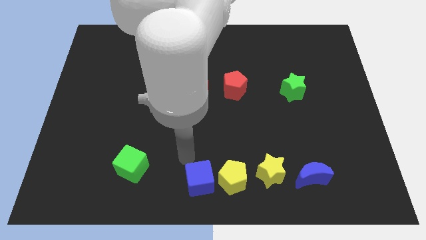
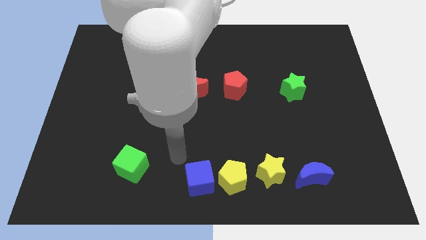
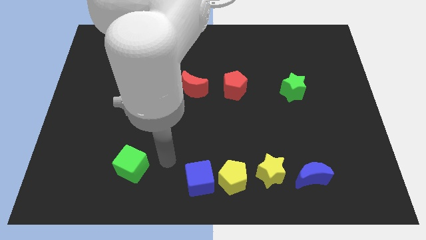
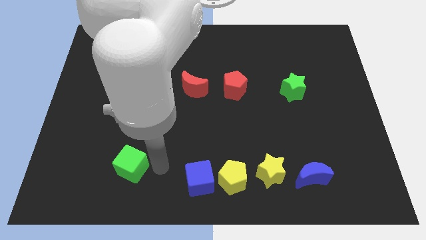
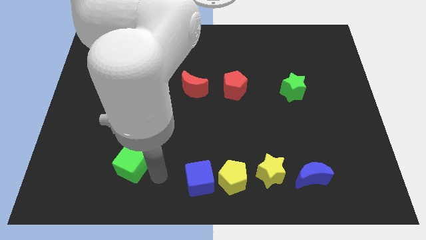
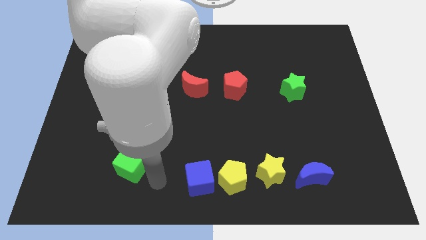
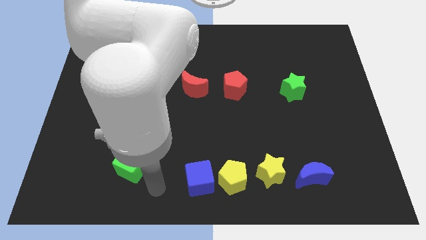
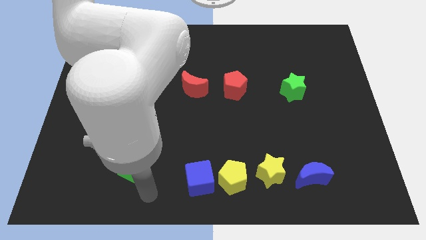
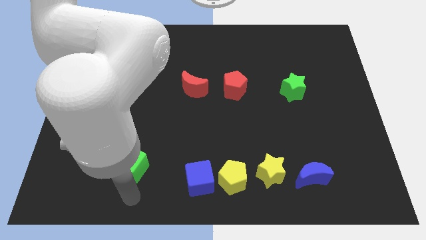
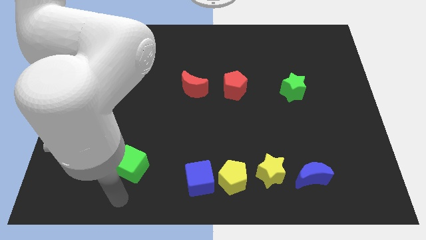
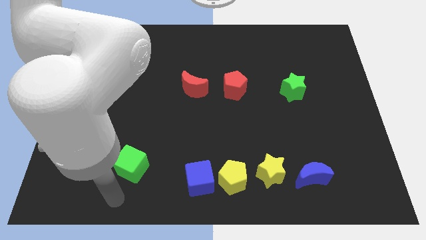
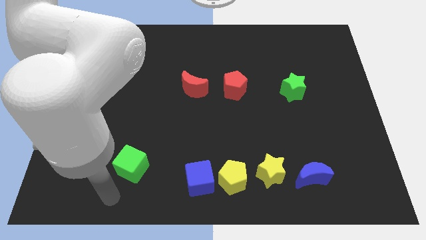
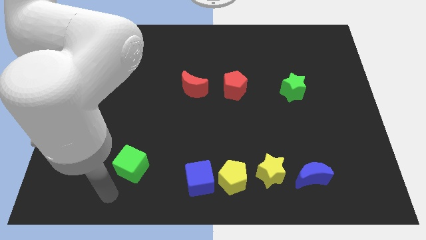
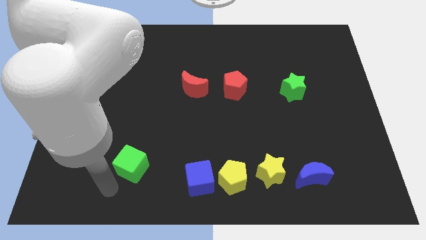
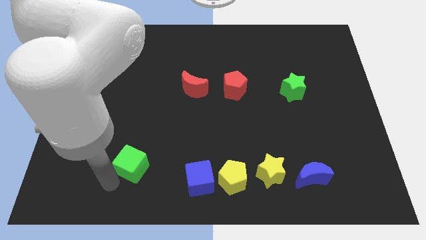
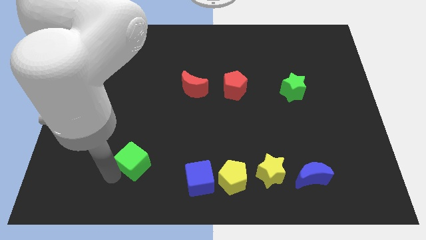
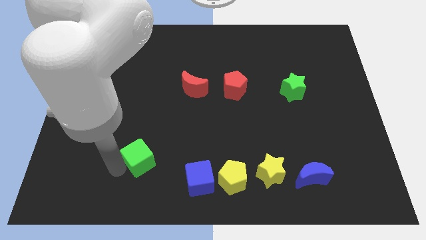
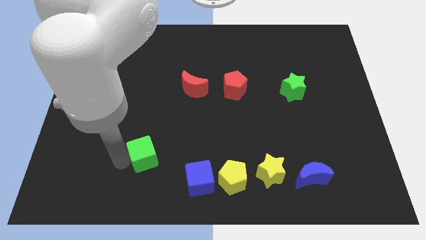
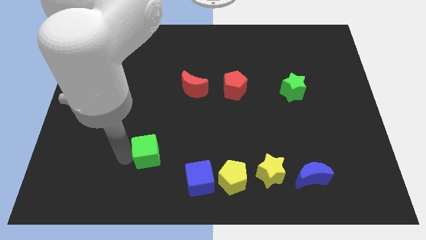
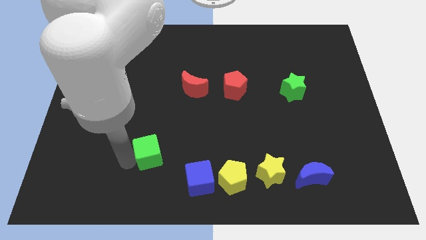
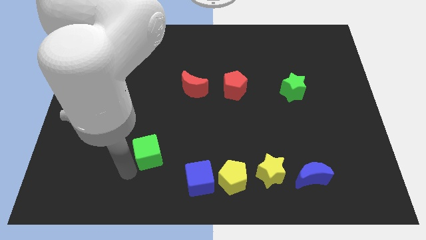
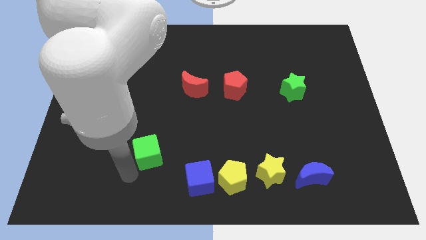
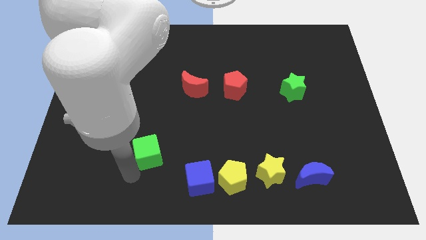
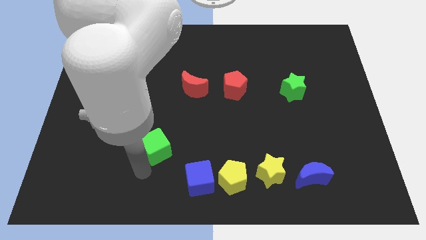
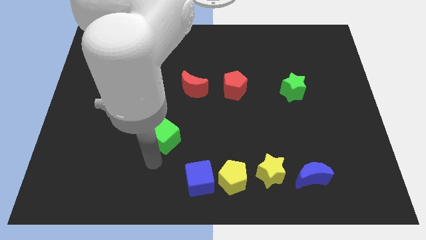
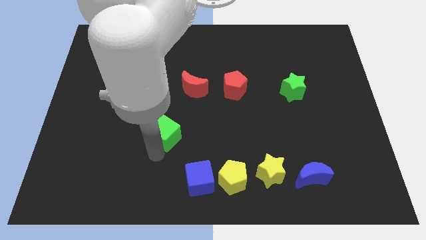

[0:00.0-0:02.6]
place the green cube diagonally top left to the blue cube

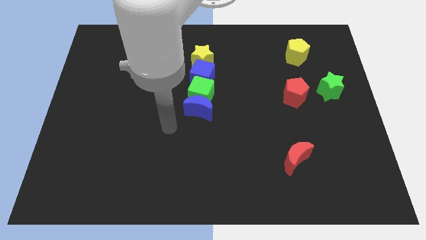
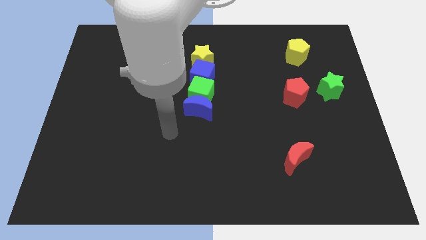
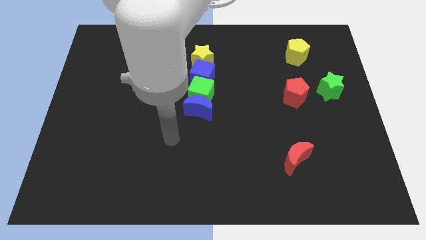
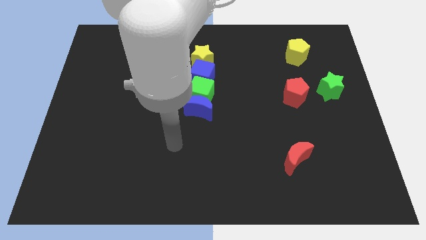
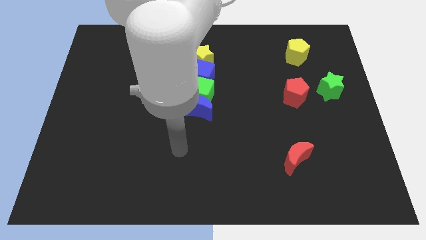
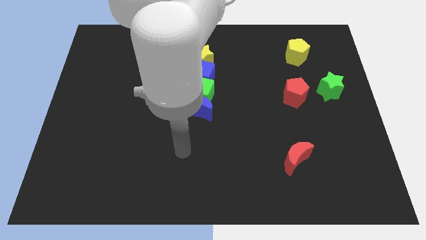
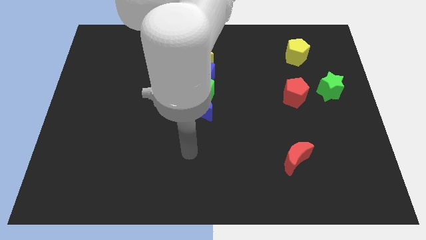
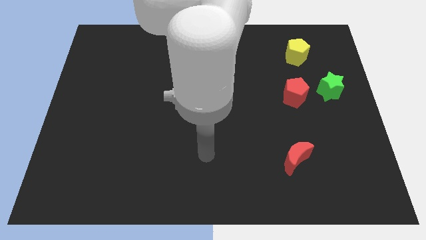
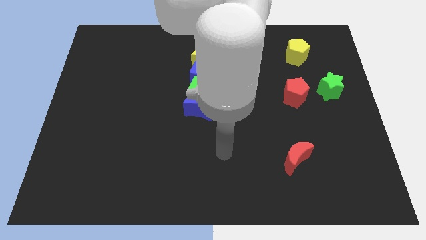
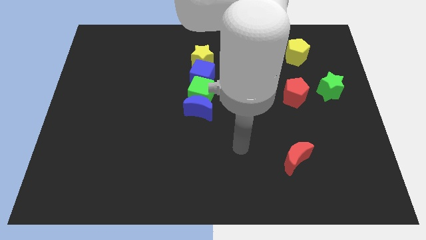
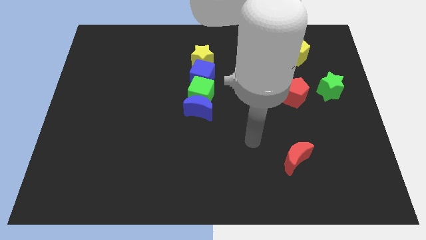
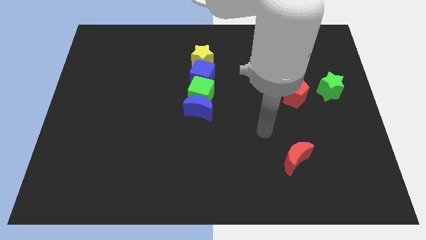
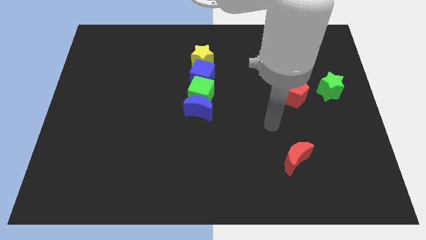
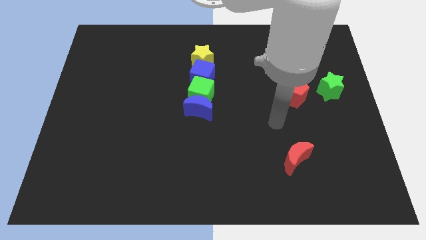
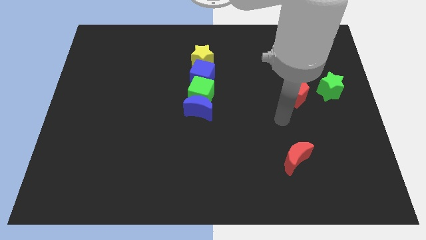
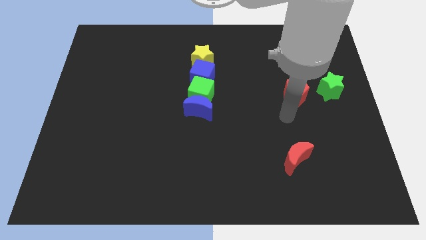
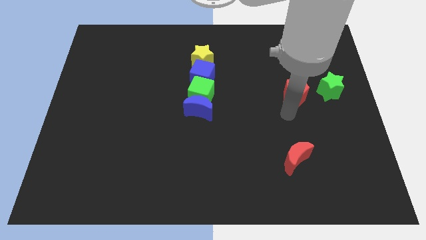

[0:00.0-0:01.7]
move your arm to the bottom of the red pentagon

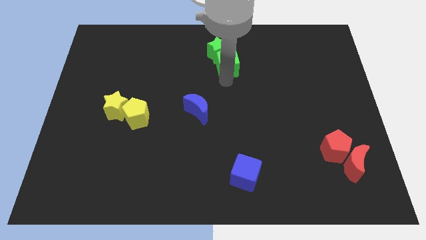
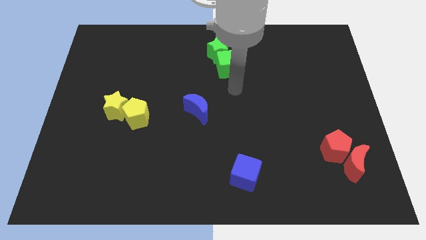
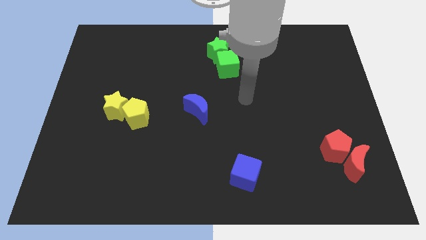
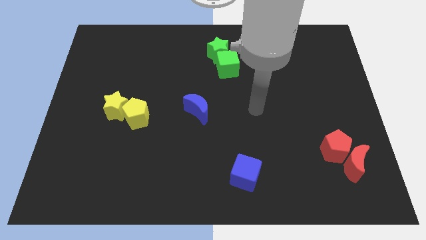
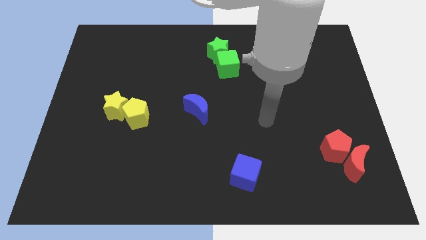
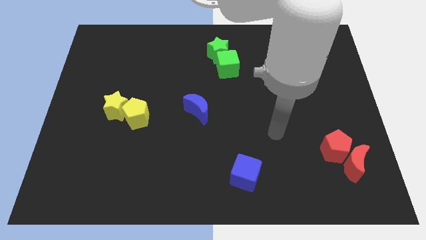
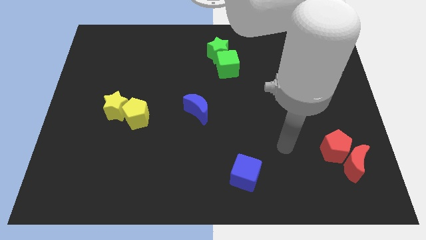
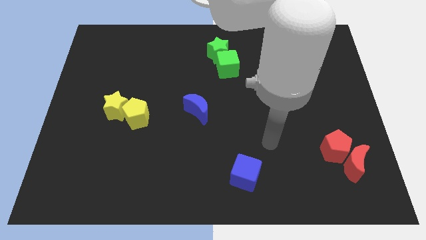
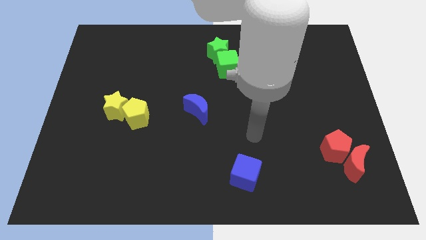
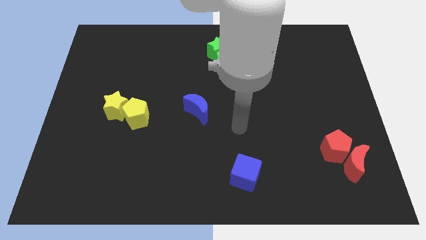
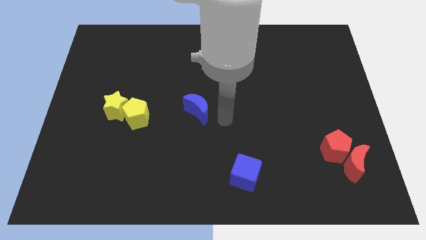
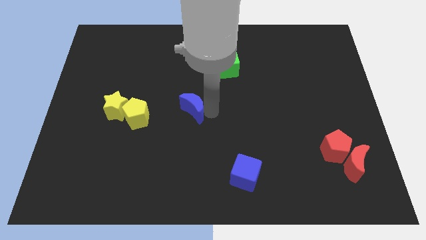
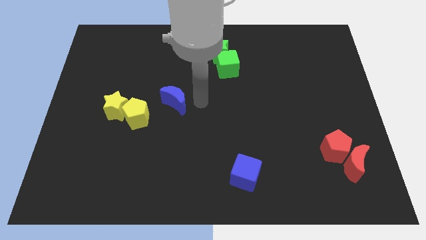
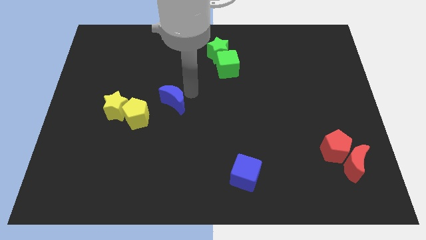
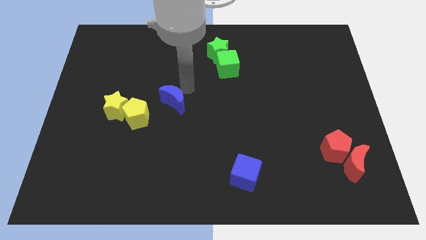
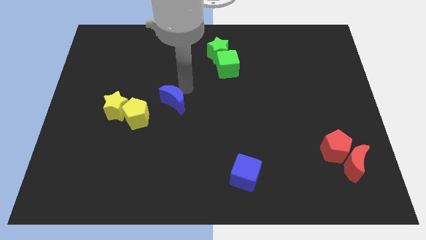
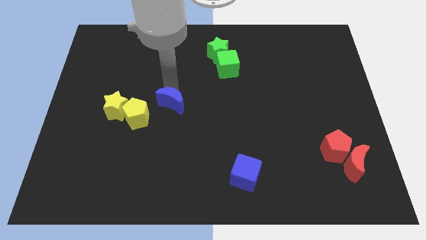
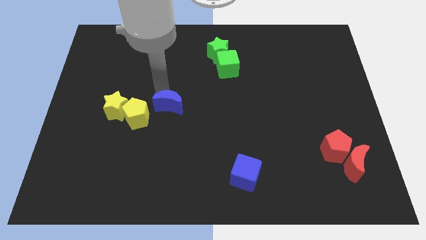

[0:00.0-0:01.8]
move blue moon on top right to yellow pentagon

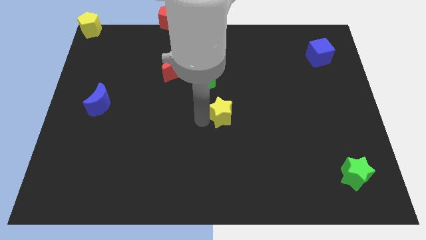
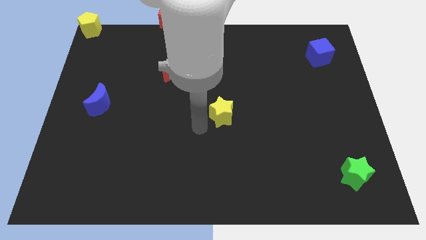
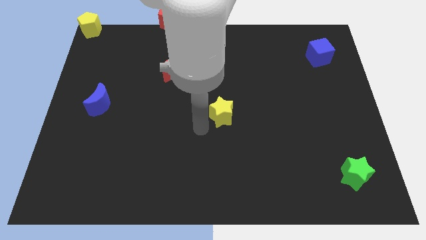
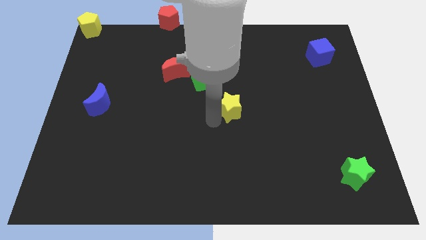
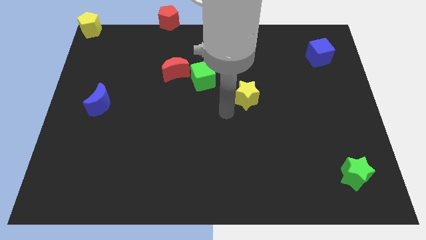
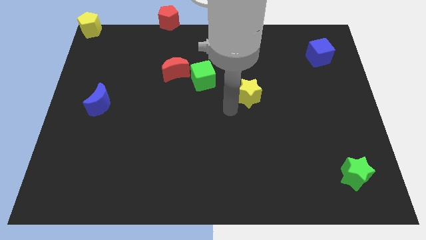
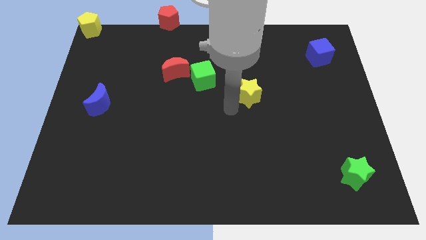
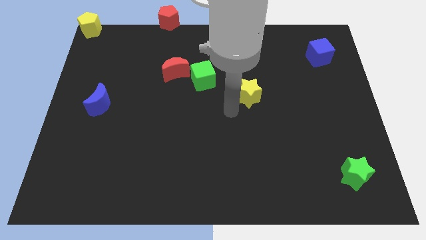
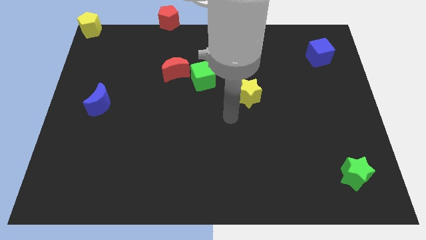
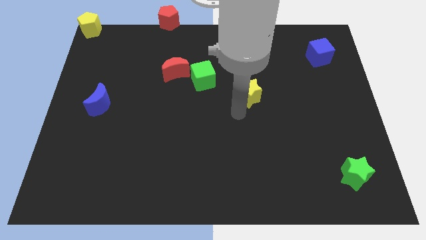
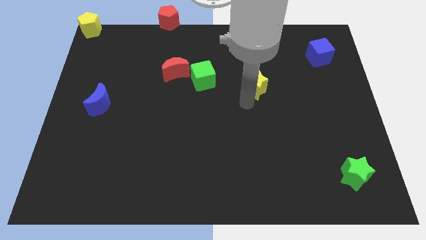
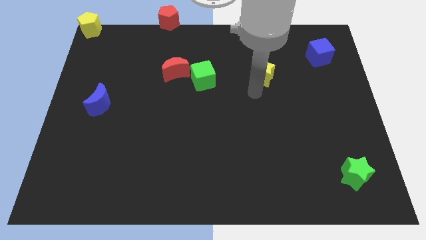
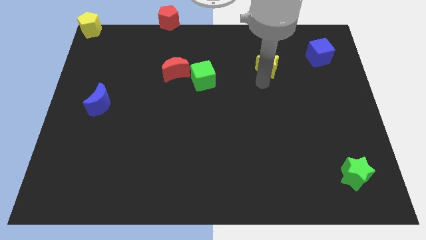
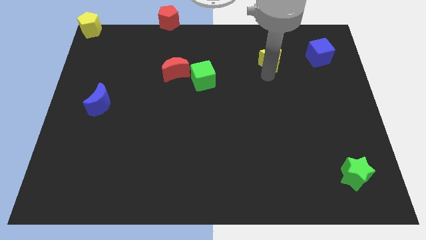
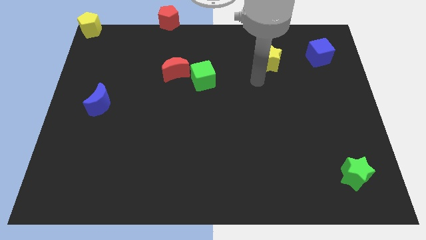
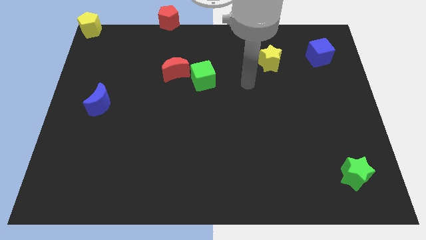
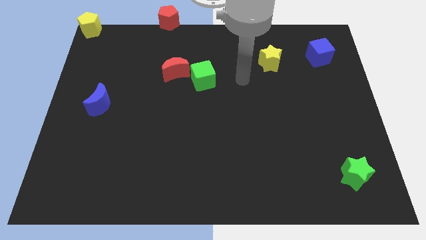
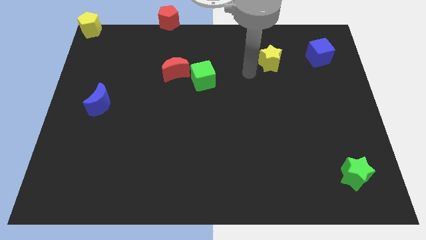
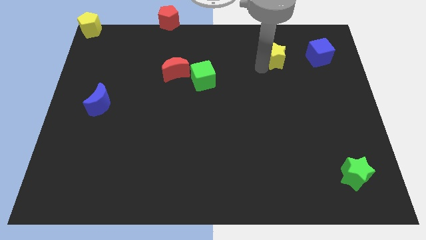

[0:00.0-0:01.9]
slide yellow star adjacent to the blue cube

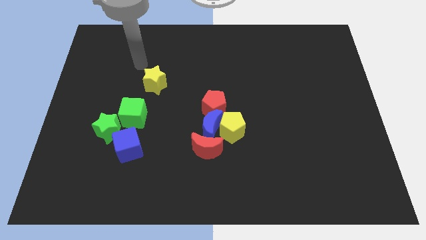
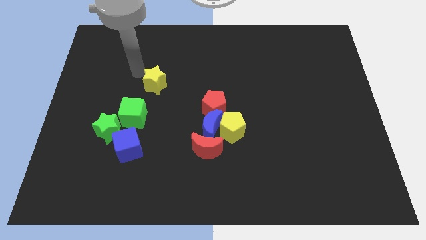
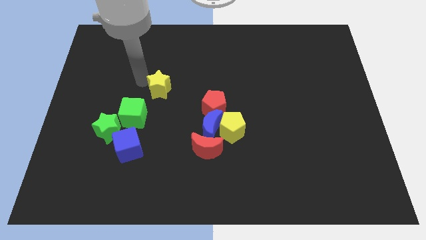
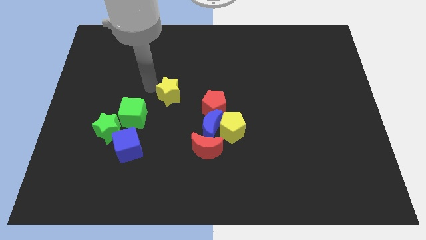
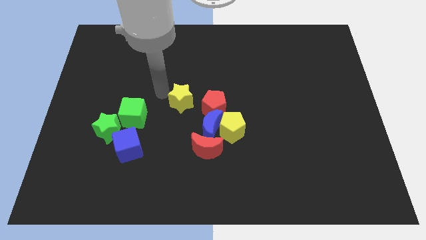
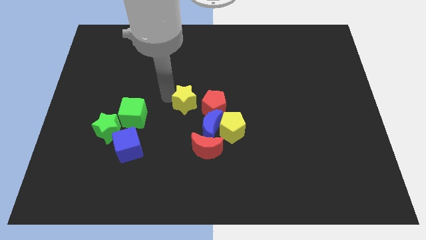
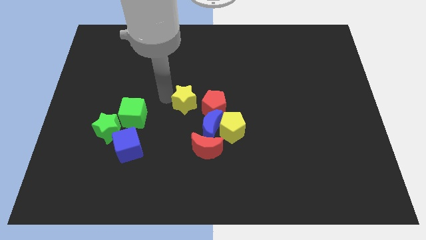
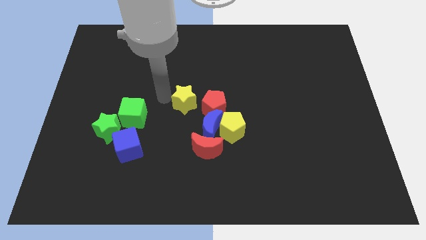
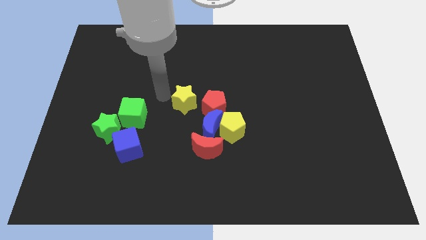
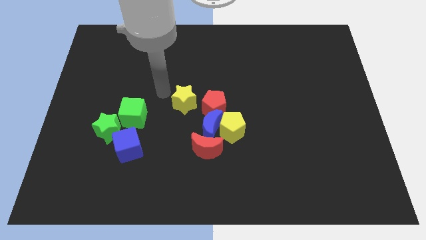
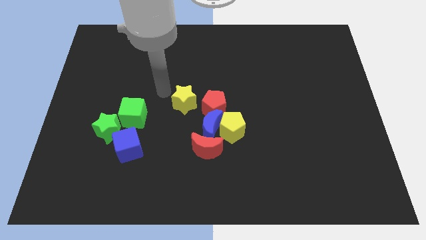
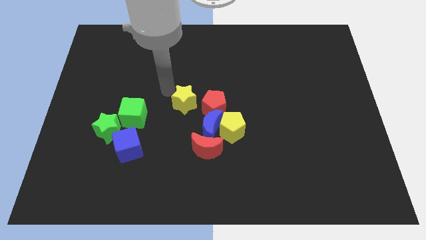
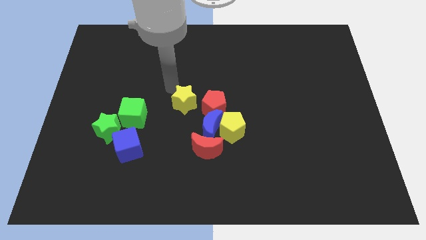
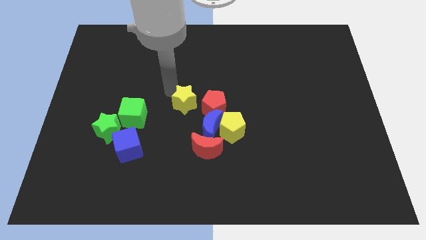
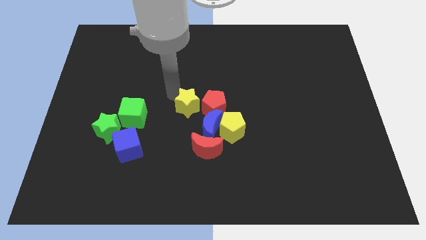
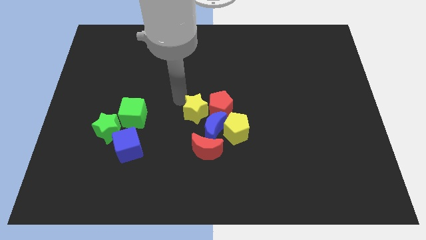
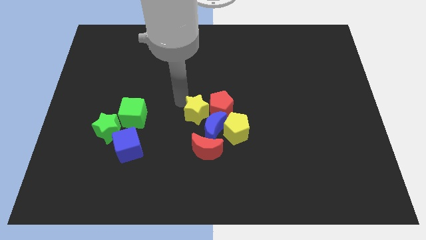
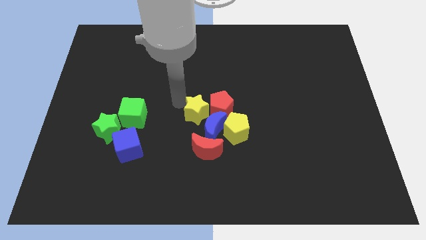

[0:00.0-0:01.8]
move the yellow star into red pentagon
